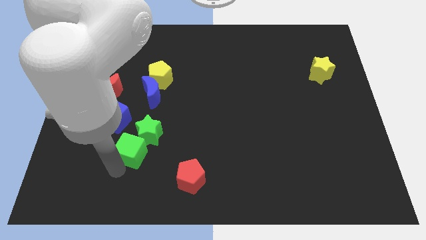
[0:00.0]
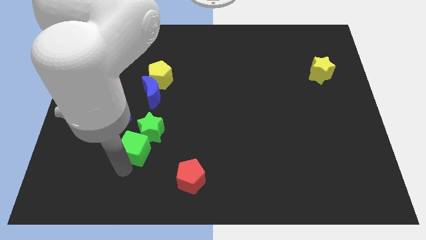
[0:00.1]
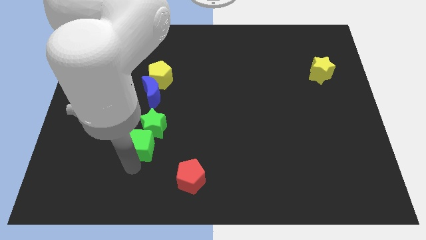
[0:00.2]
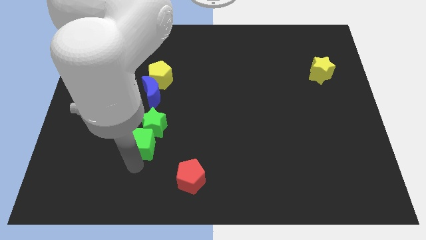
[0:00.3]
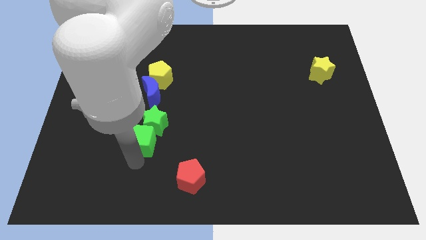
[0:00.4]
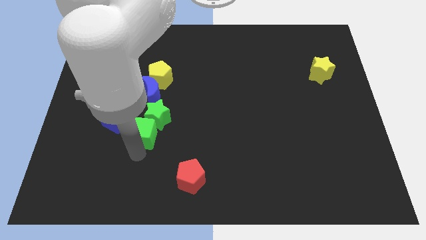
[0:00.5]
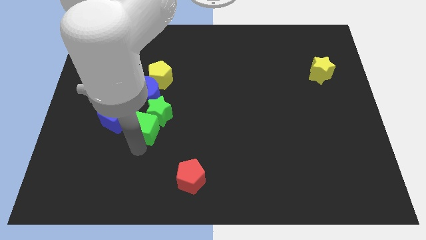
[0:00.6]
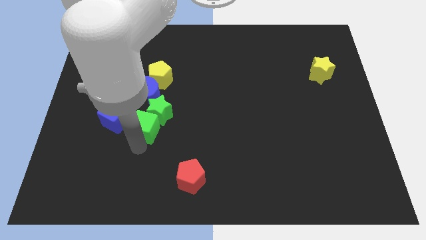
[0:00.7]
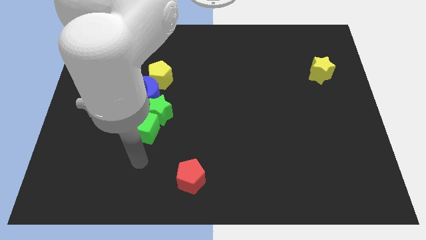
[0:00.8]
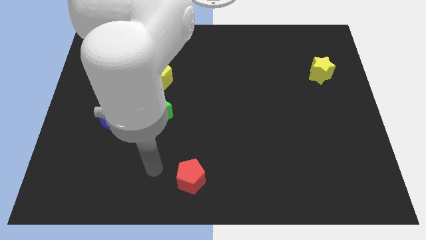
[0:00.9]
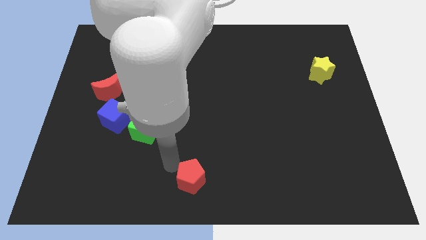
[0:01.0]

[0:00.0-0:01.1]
push the green cube below the green star

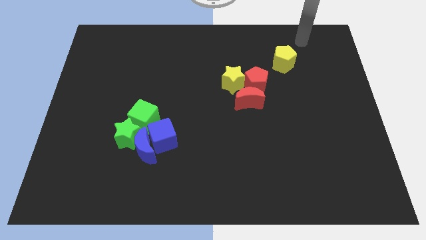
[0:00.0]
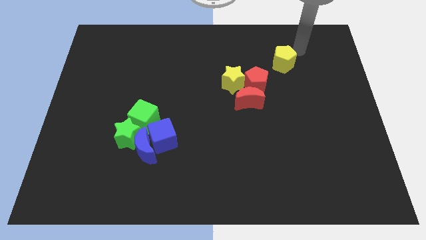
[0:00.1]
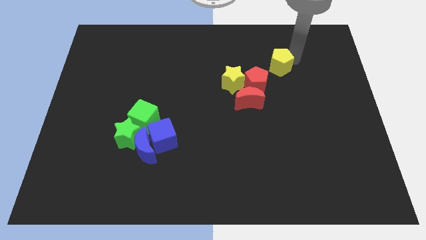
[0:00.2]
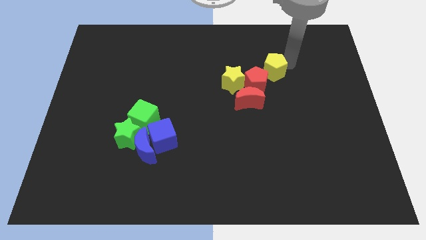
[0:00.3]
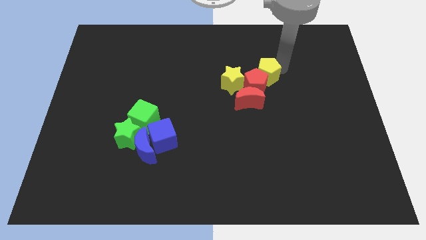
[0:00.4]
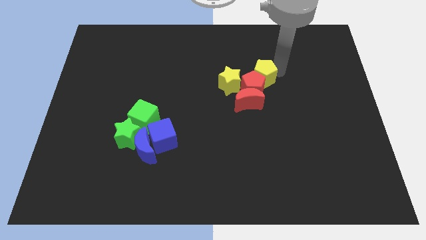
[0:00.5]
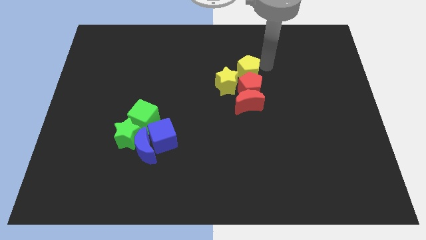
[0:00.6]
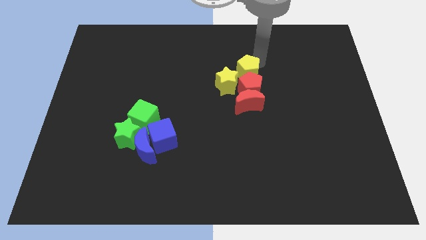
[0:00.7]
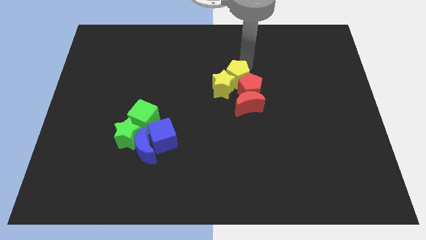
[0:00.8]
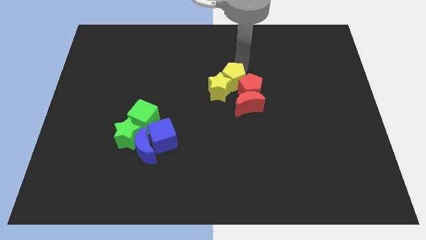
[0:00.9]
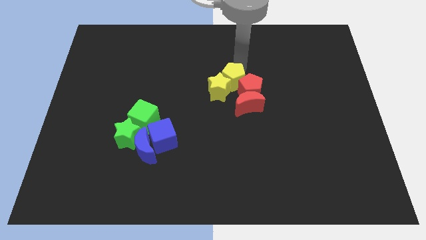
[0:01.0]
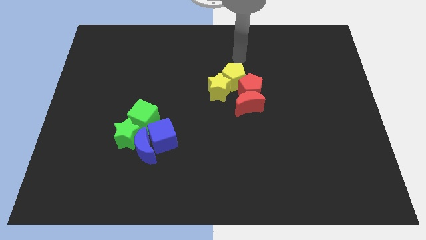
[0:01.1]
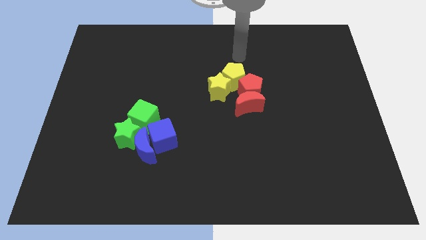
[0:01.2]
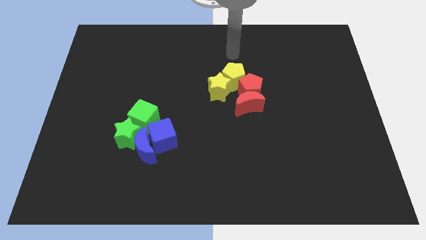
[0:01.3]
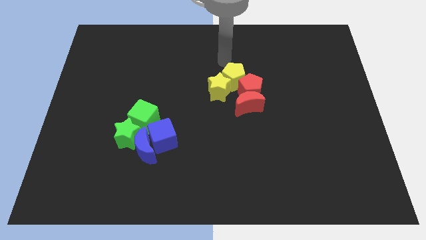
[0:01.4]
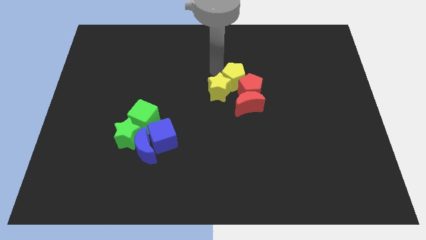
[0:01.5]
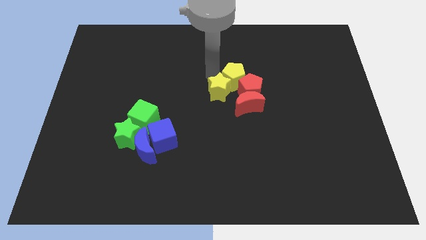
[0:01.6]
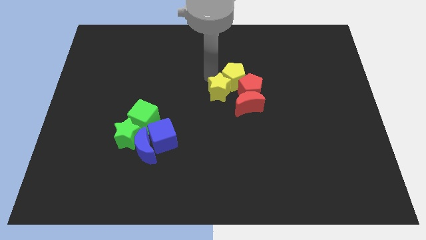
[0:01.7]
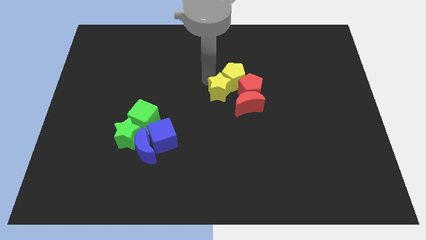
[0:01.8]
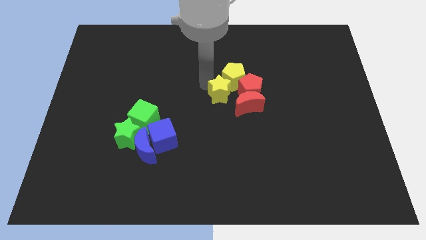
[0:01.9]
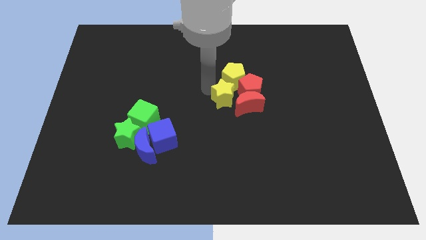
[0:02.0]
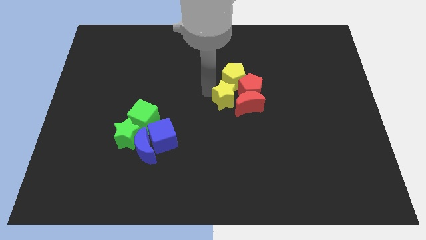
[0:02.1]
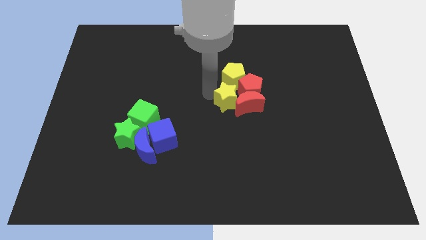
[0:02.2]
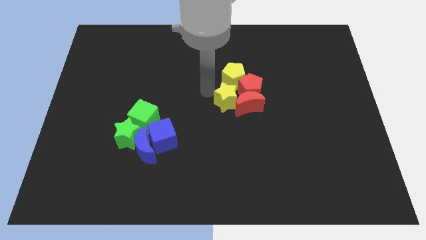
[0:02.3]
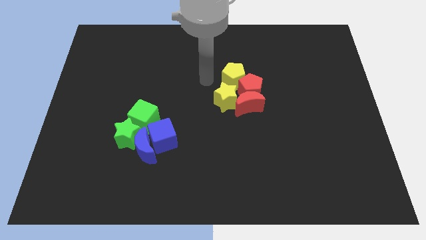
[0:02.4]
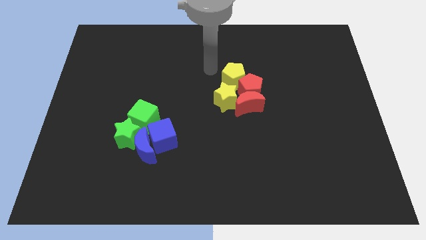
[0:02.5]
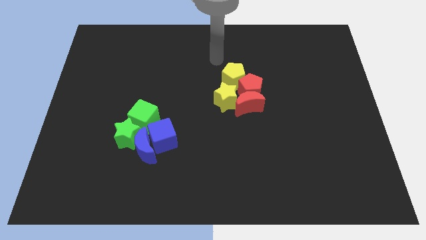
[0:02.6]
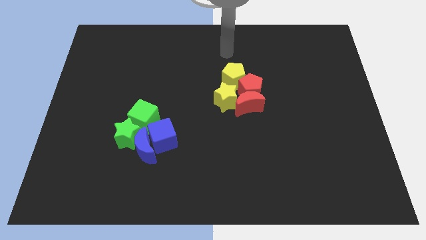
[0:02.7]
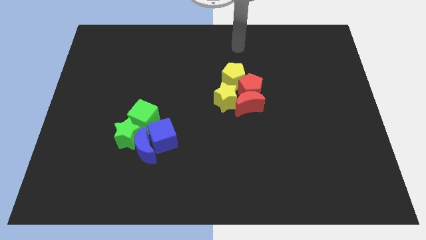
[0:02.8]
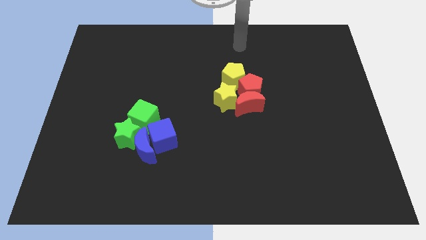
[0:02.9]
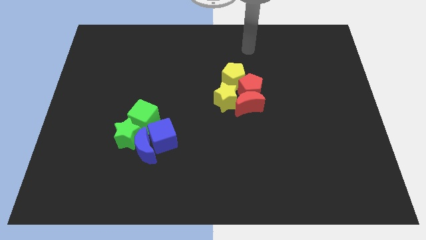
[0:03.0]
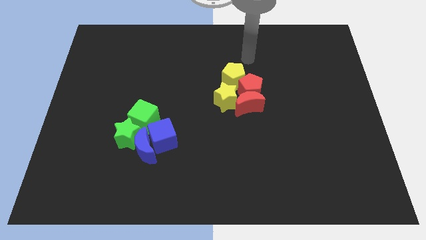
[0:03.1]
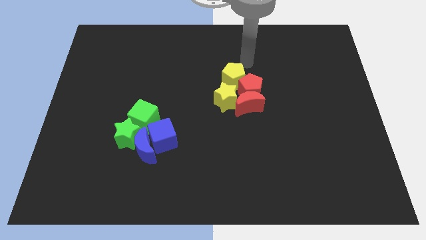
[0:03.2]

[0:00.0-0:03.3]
push yellow pentagon into yellow star

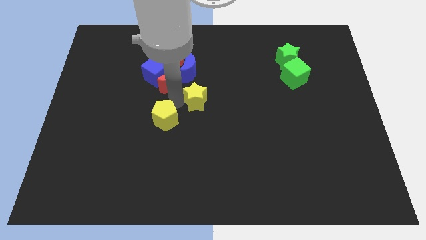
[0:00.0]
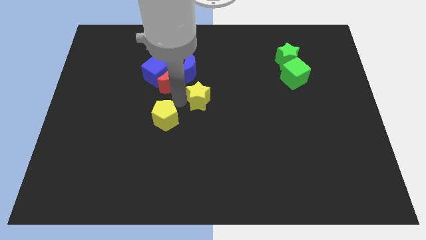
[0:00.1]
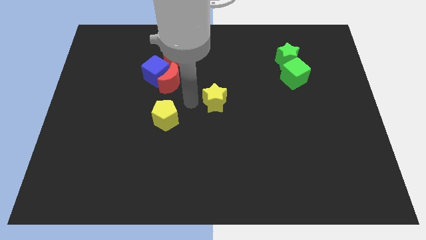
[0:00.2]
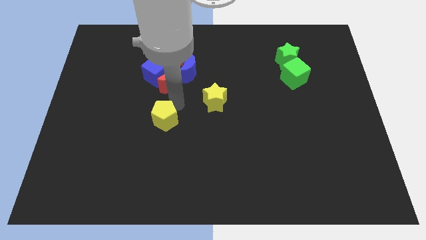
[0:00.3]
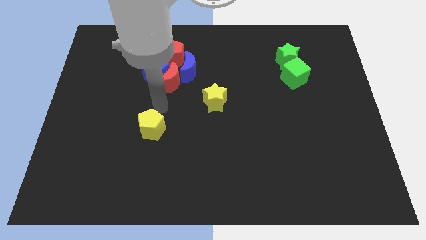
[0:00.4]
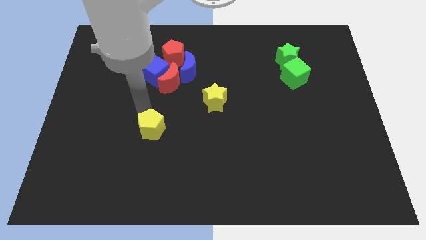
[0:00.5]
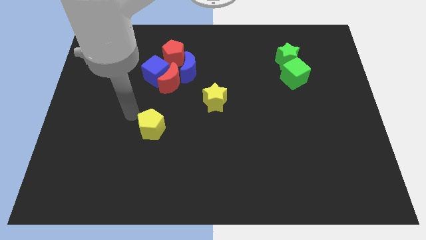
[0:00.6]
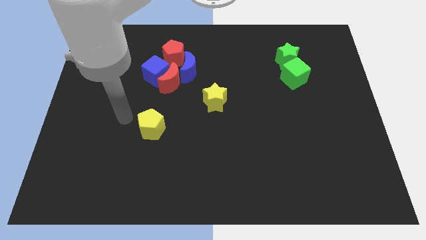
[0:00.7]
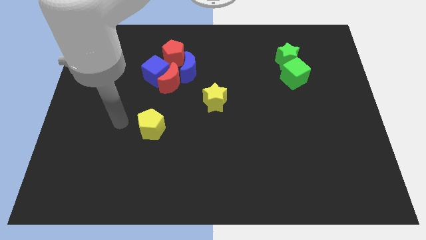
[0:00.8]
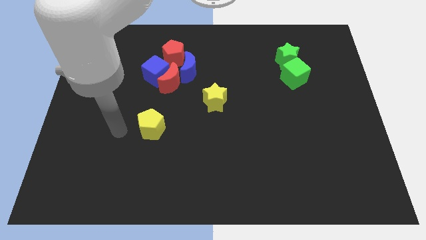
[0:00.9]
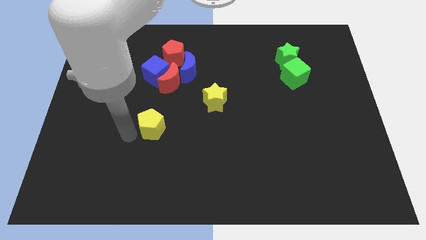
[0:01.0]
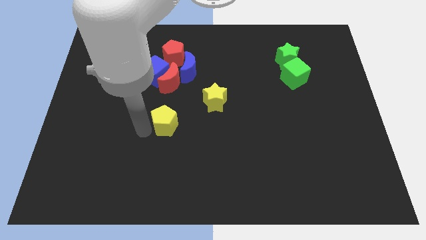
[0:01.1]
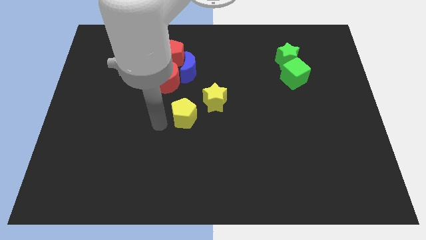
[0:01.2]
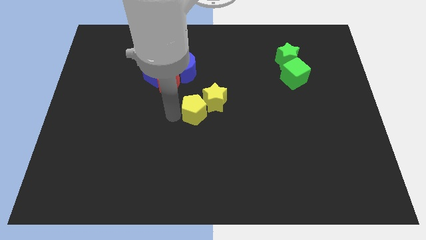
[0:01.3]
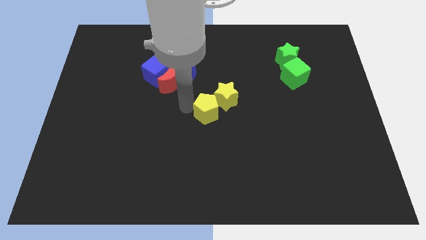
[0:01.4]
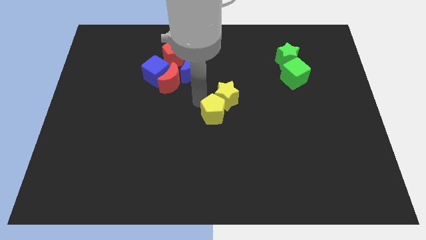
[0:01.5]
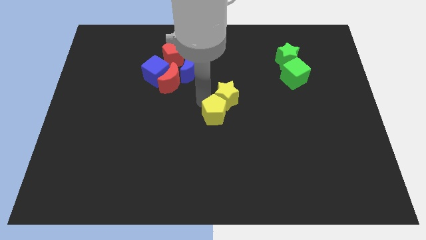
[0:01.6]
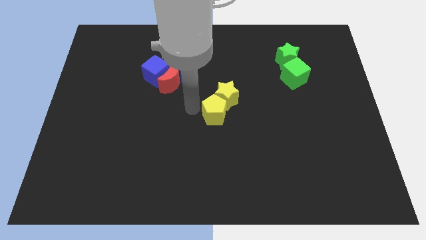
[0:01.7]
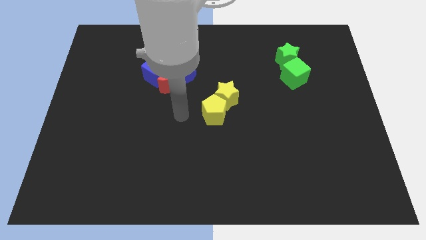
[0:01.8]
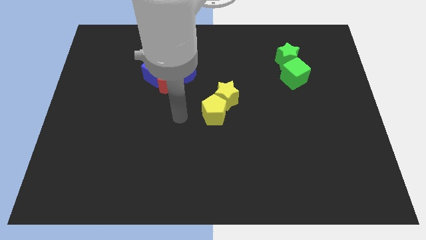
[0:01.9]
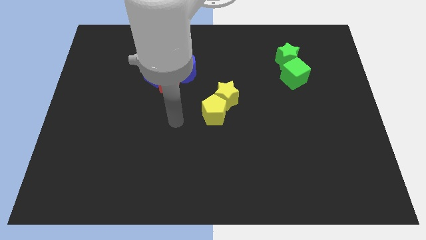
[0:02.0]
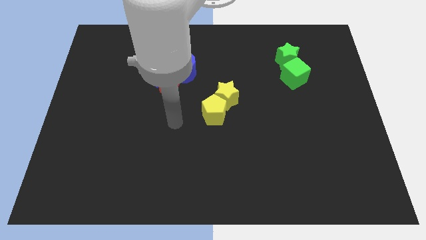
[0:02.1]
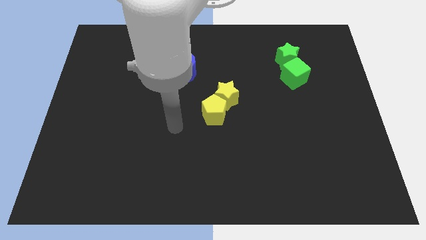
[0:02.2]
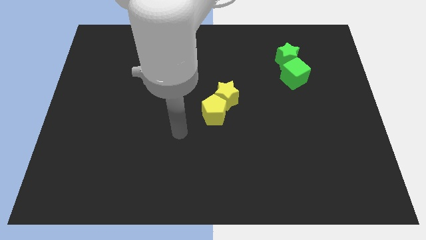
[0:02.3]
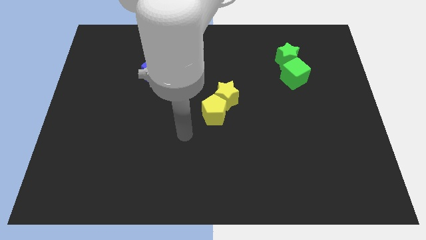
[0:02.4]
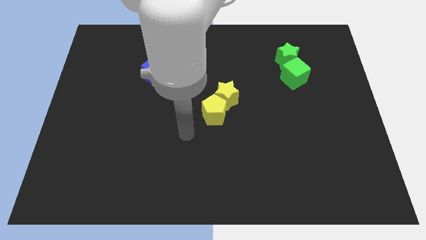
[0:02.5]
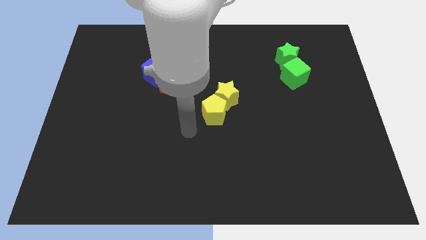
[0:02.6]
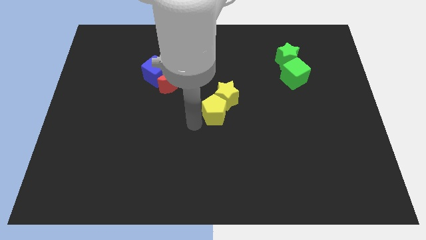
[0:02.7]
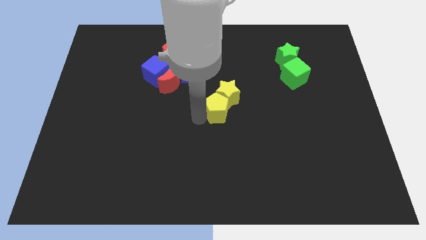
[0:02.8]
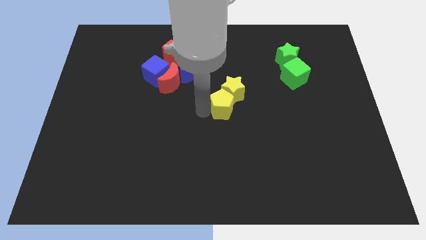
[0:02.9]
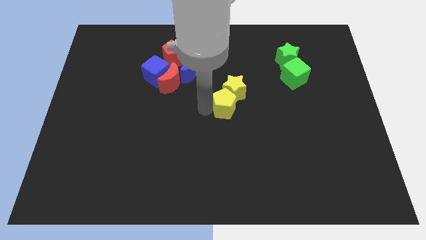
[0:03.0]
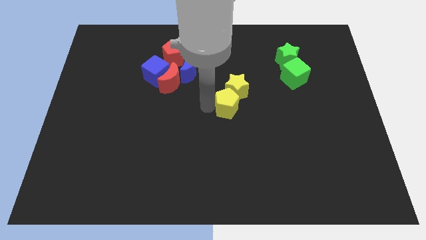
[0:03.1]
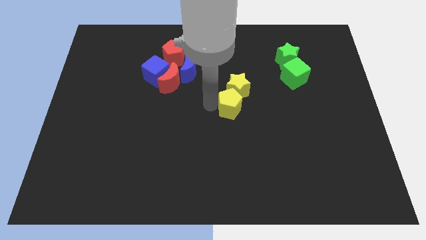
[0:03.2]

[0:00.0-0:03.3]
move yellow pentagon into yellow star

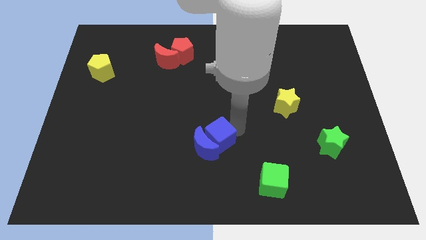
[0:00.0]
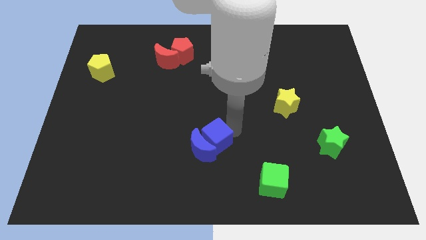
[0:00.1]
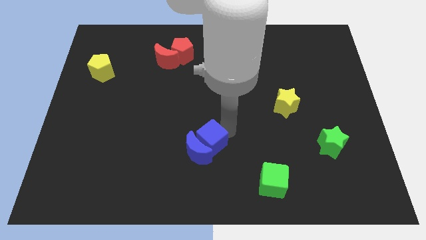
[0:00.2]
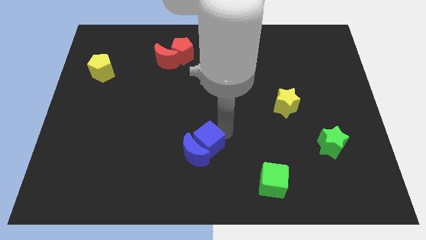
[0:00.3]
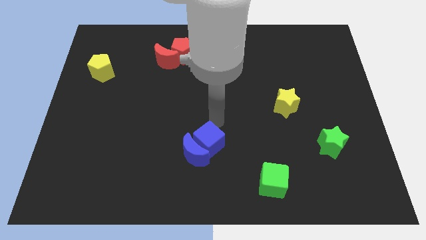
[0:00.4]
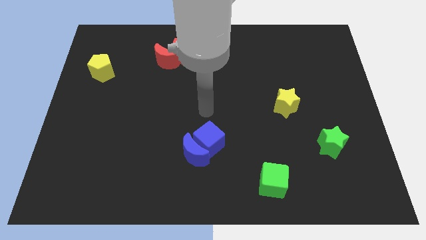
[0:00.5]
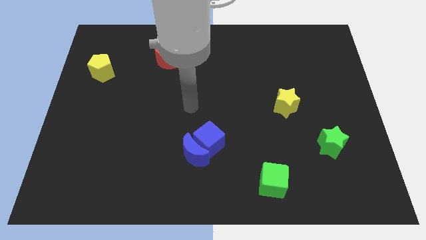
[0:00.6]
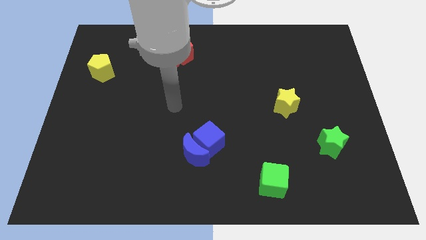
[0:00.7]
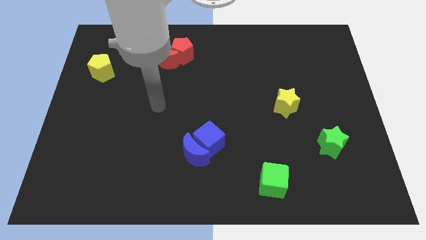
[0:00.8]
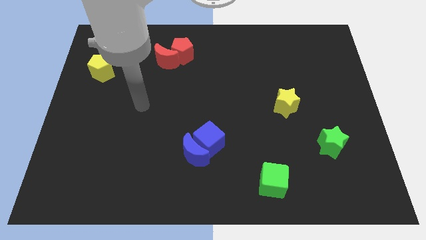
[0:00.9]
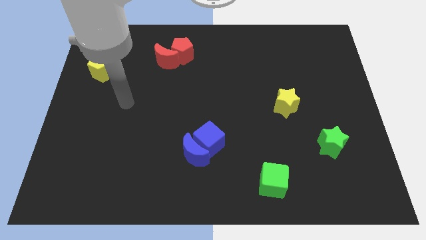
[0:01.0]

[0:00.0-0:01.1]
move your arm away from blue blocks

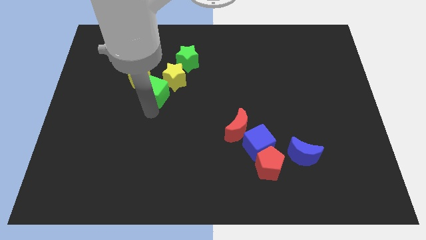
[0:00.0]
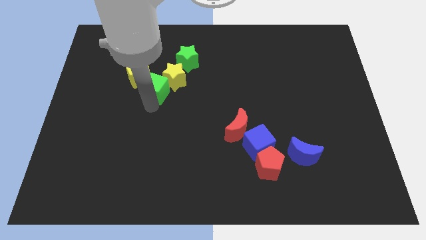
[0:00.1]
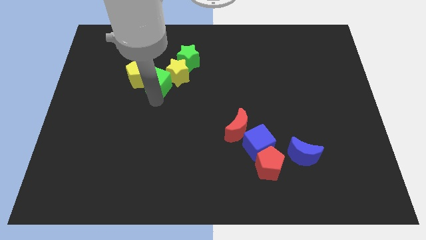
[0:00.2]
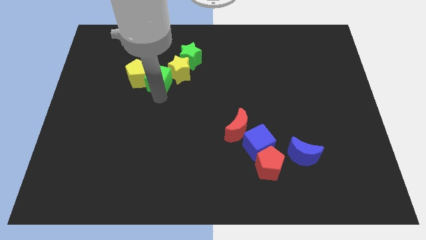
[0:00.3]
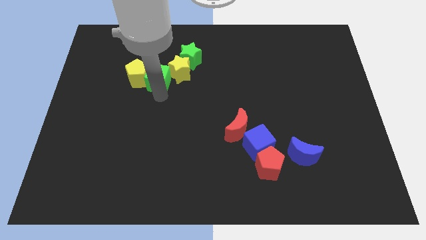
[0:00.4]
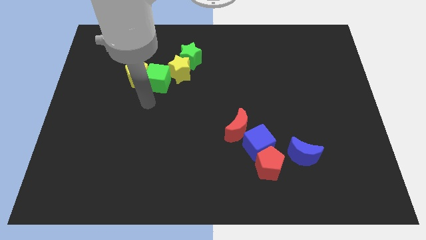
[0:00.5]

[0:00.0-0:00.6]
push the green cube in between the yellow star and yellow pentagon
